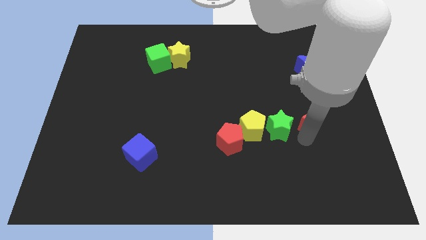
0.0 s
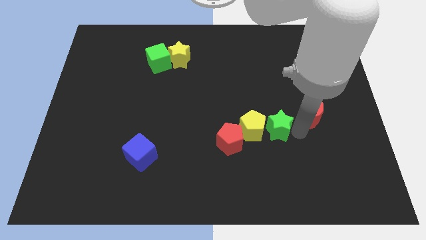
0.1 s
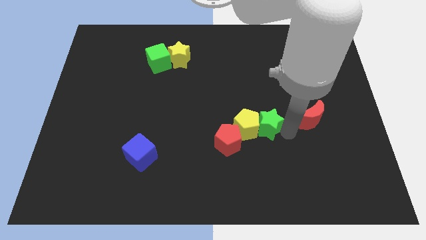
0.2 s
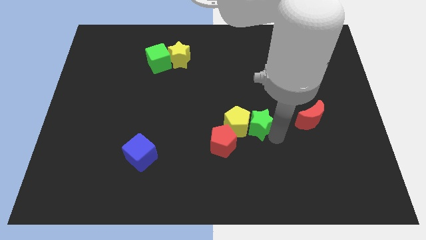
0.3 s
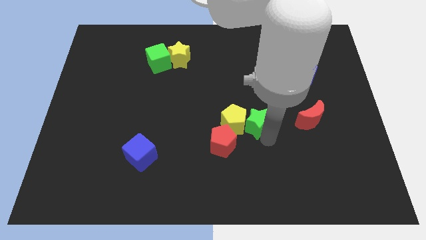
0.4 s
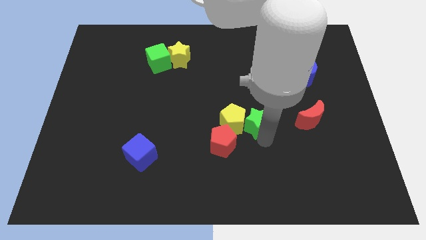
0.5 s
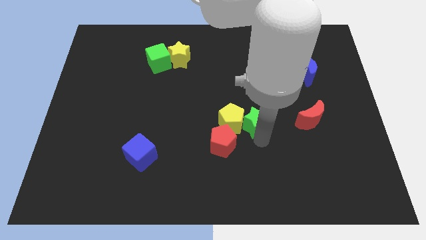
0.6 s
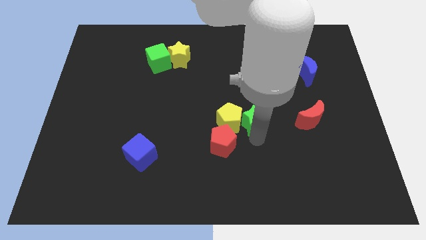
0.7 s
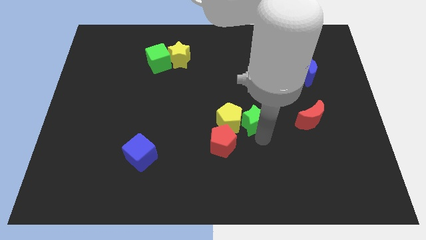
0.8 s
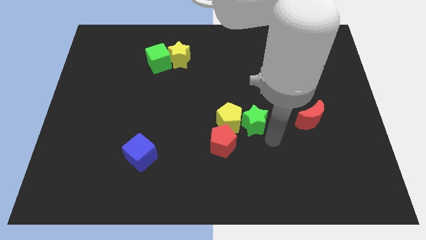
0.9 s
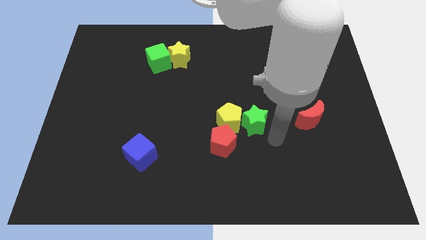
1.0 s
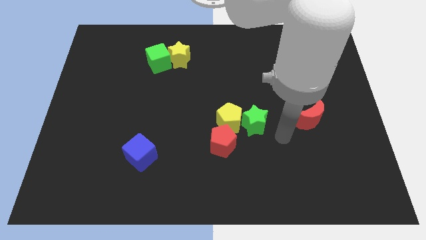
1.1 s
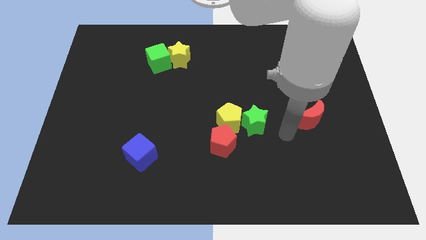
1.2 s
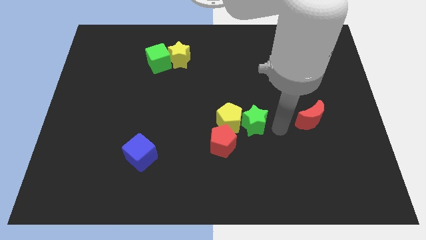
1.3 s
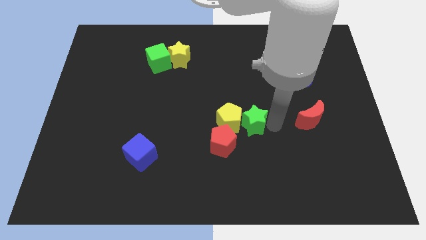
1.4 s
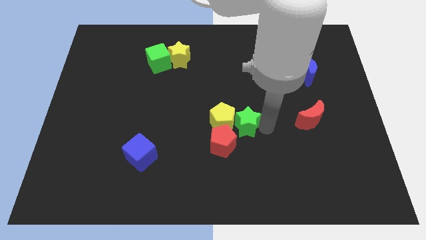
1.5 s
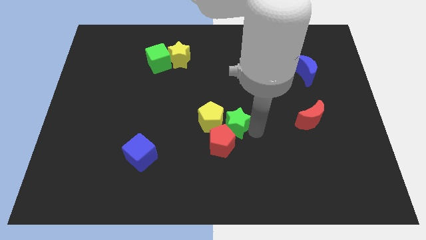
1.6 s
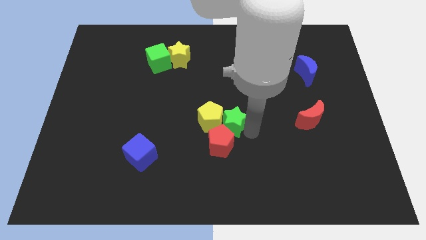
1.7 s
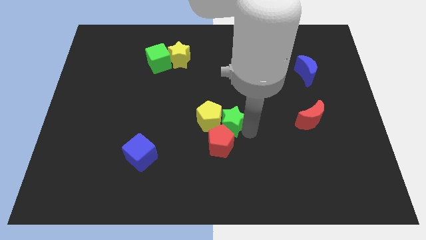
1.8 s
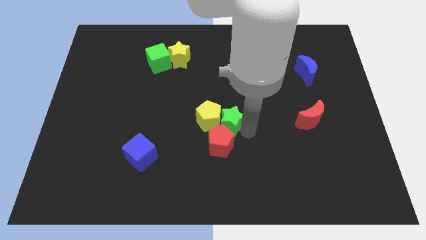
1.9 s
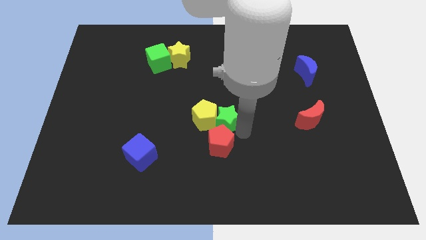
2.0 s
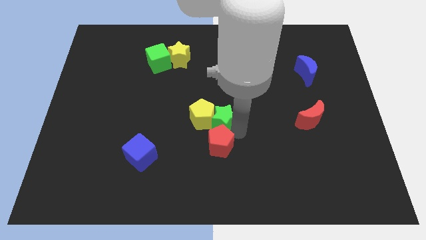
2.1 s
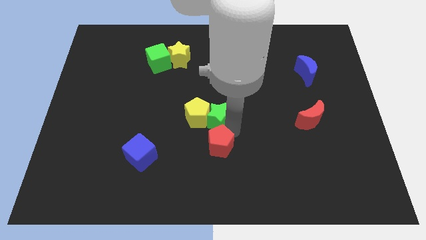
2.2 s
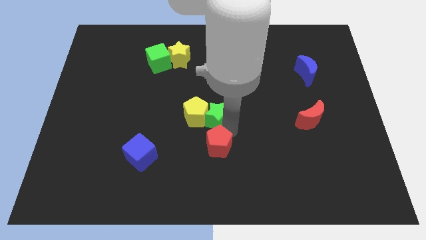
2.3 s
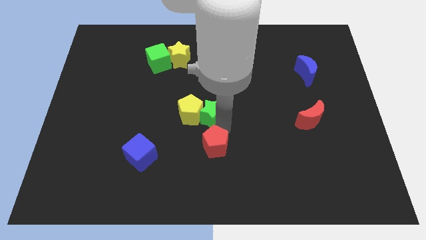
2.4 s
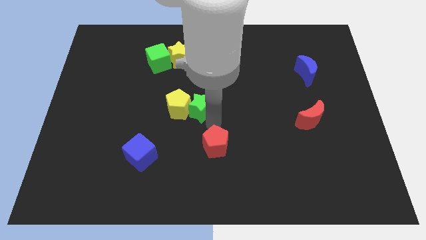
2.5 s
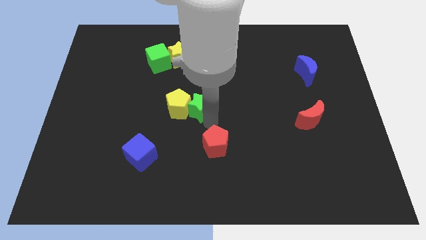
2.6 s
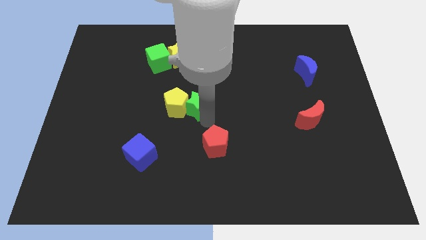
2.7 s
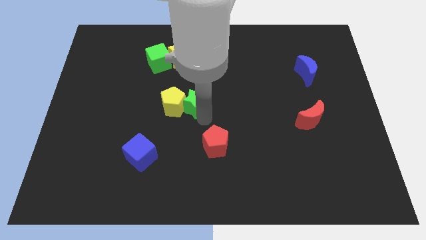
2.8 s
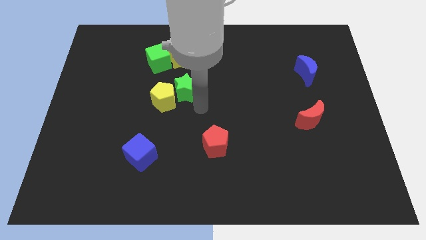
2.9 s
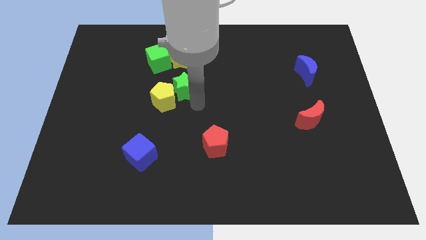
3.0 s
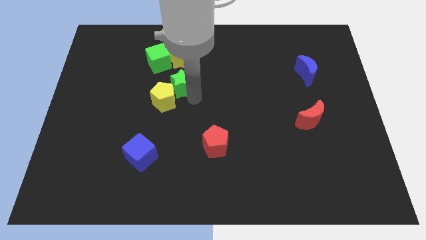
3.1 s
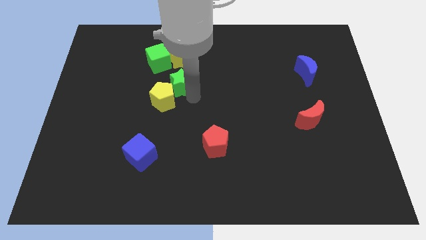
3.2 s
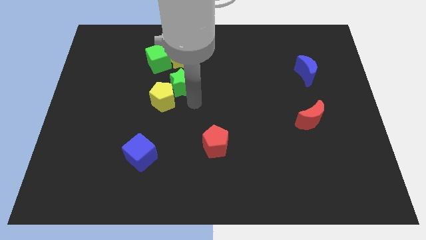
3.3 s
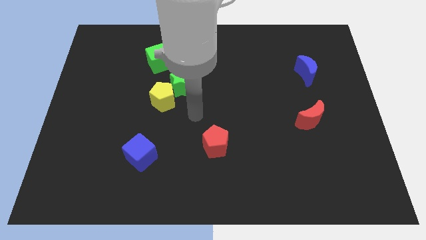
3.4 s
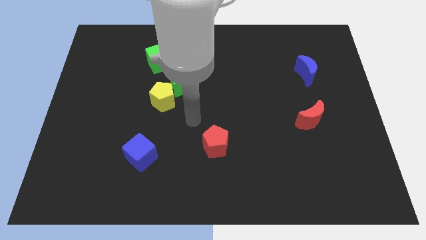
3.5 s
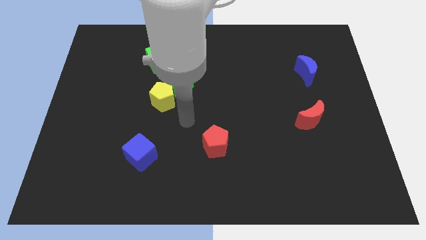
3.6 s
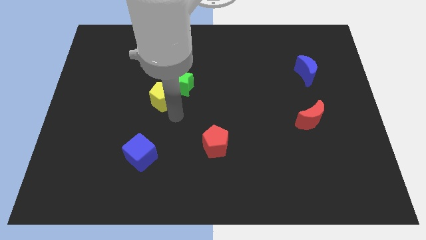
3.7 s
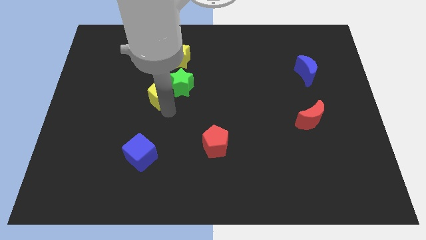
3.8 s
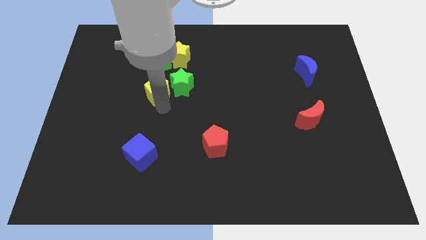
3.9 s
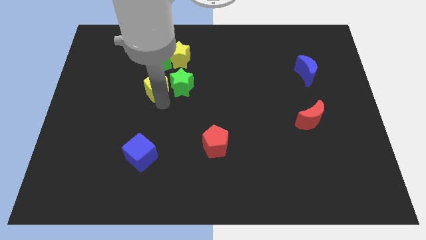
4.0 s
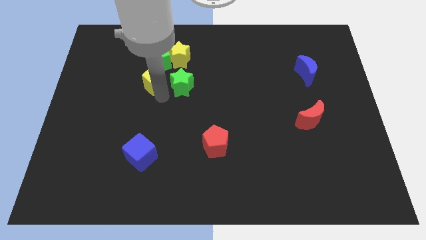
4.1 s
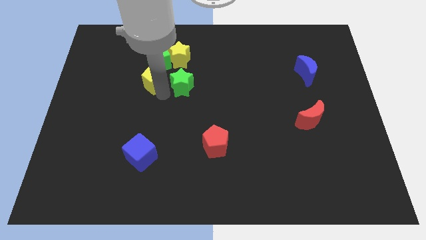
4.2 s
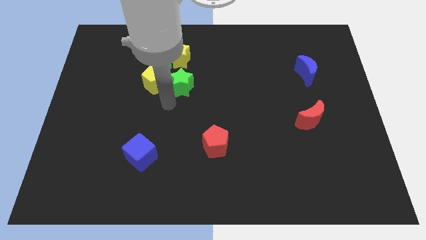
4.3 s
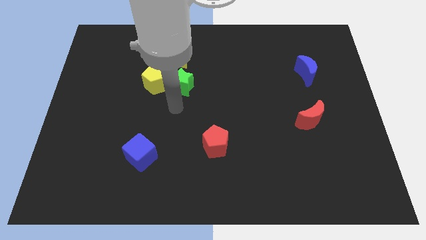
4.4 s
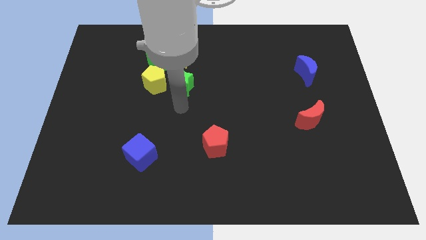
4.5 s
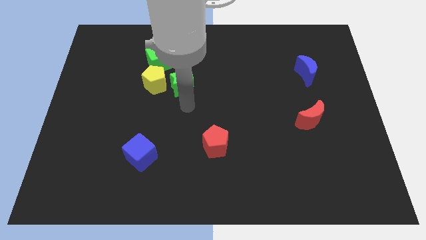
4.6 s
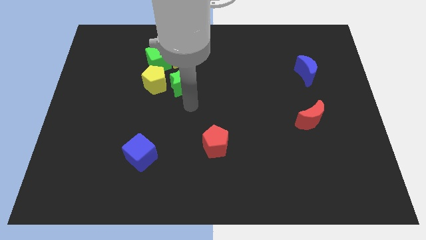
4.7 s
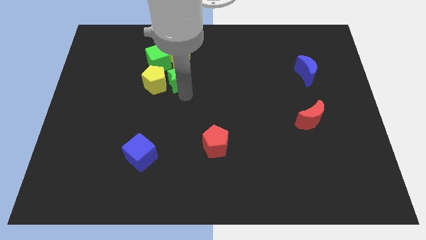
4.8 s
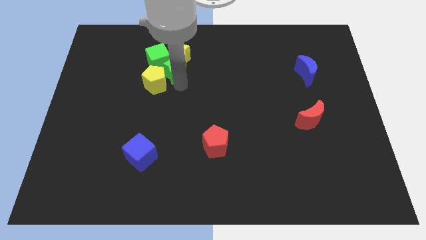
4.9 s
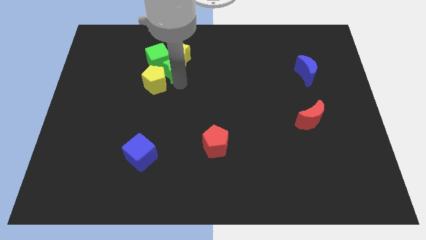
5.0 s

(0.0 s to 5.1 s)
place the yellow pentagon to the bottom of the green cube

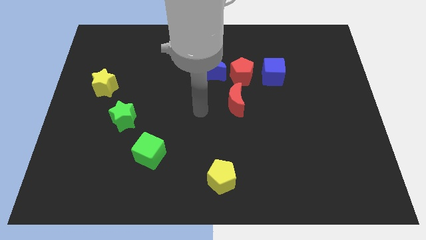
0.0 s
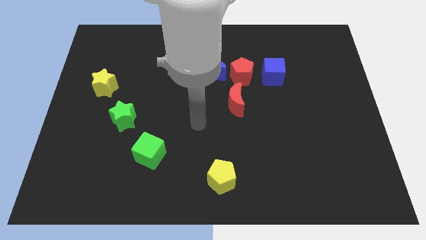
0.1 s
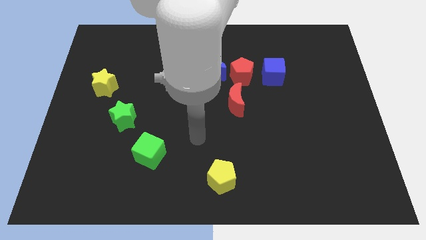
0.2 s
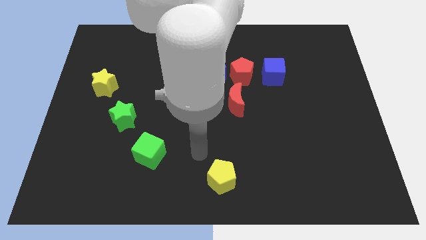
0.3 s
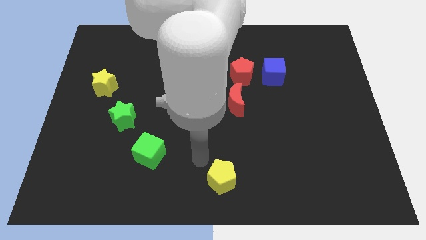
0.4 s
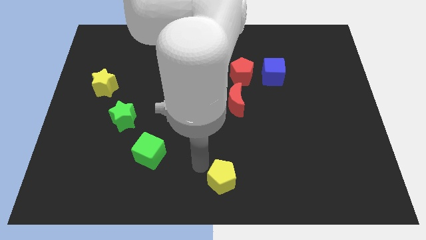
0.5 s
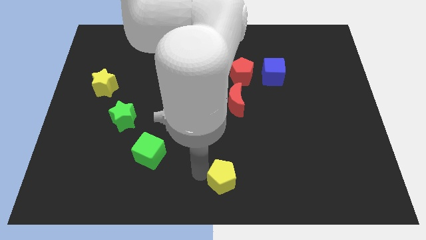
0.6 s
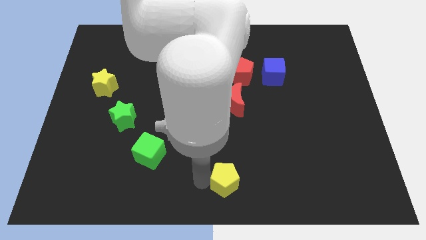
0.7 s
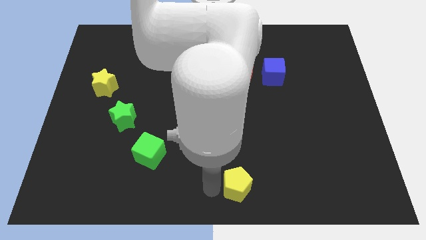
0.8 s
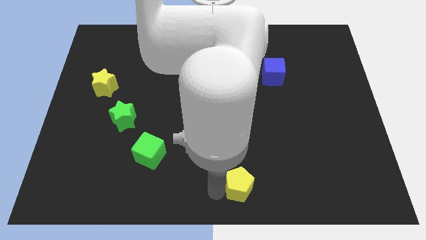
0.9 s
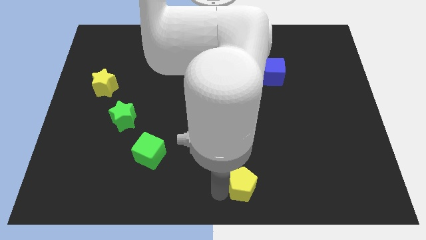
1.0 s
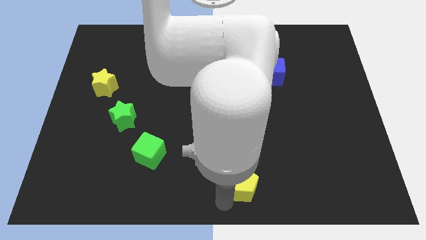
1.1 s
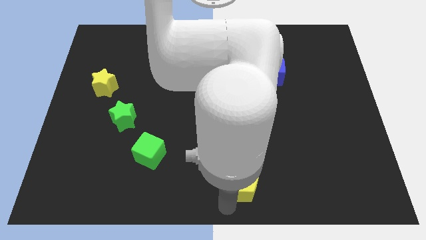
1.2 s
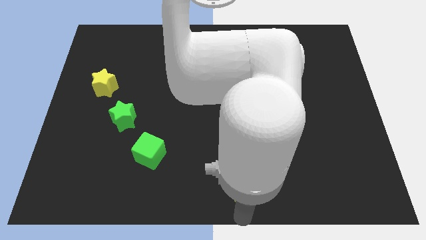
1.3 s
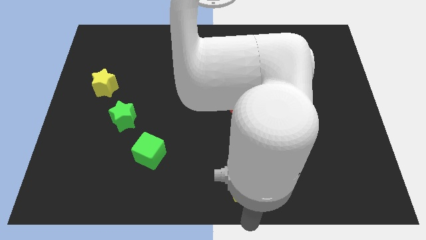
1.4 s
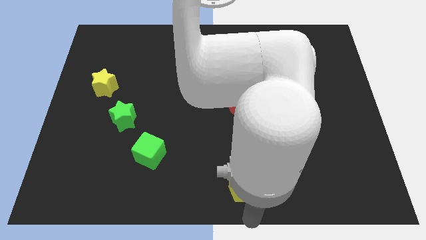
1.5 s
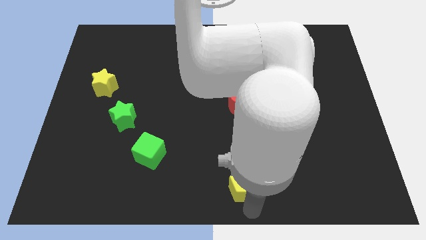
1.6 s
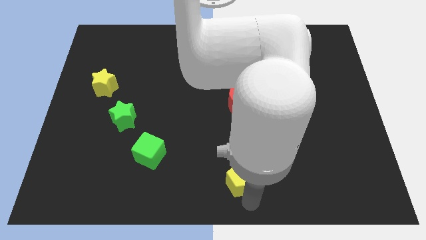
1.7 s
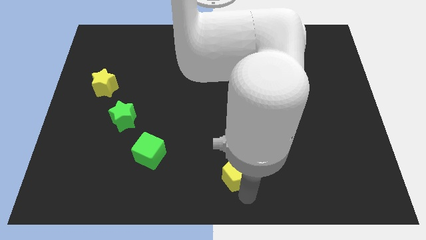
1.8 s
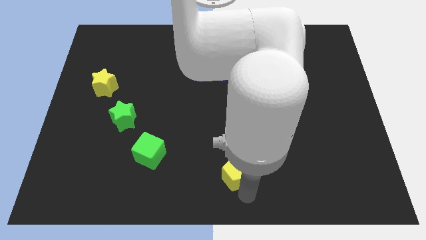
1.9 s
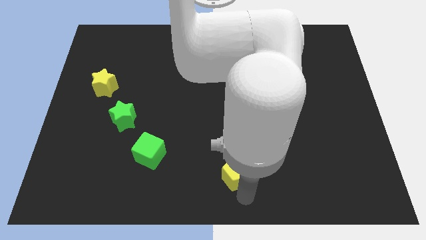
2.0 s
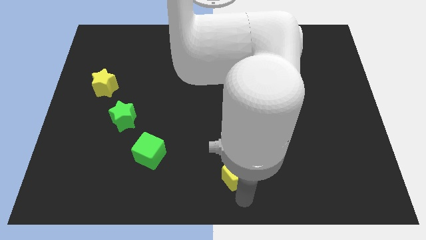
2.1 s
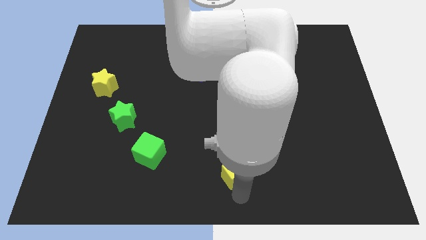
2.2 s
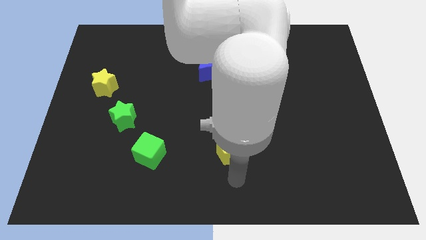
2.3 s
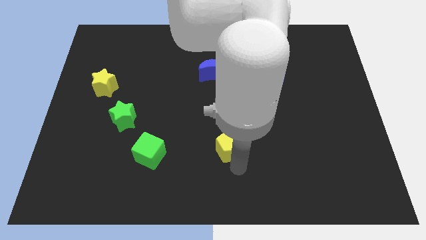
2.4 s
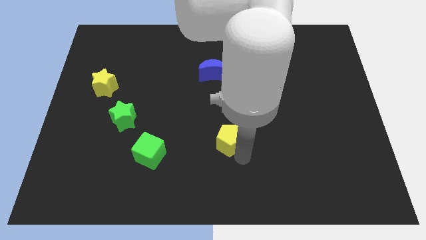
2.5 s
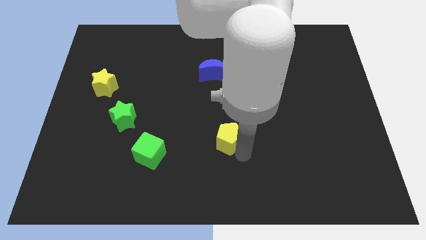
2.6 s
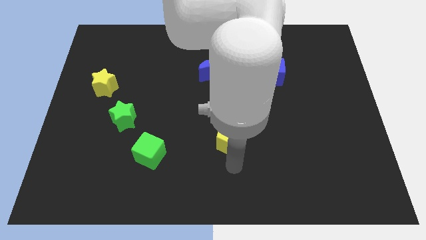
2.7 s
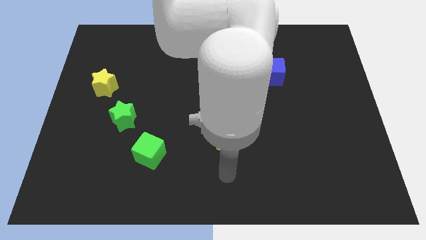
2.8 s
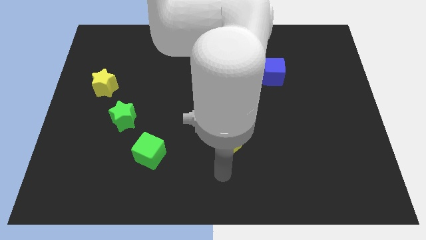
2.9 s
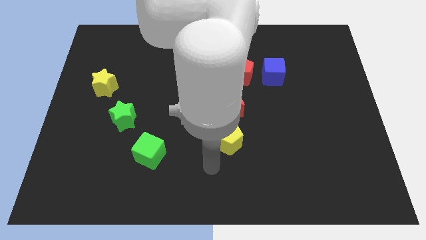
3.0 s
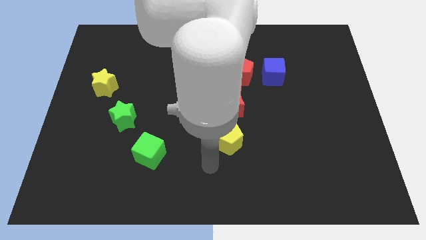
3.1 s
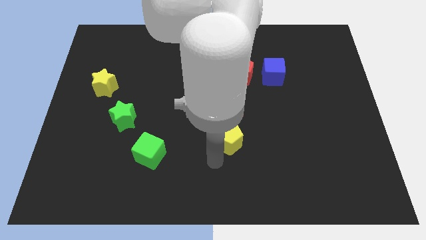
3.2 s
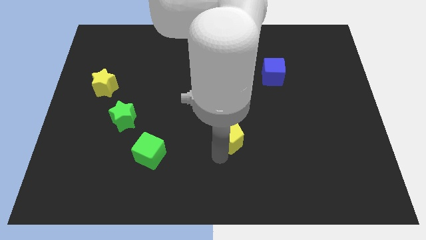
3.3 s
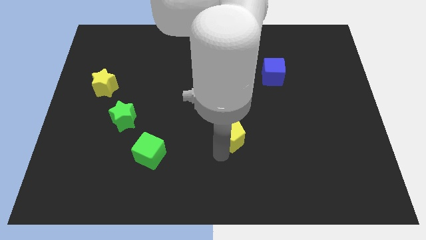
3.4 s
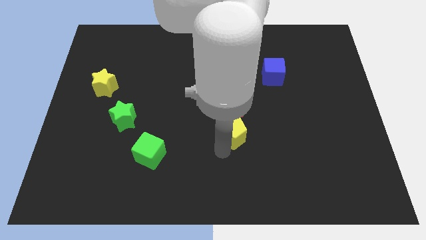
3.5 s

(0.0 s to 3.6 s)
place the yellow pentagon below the red crescent

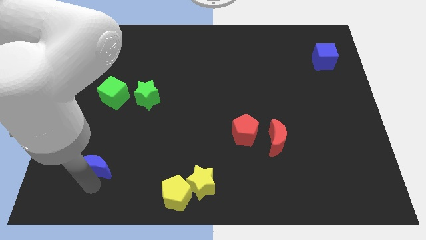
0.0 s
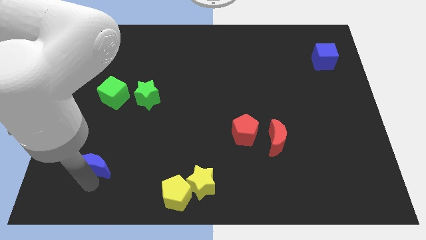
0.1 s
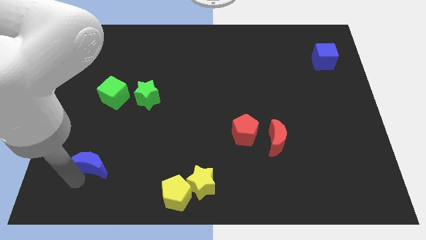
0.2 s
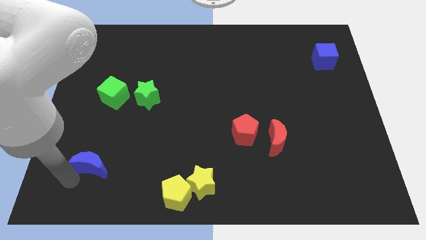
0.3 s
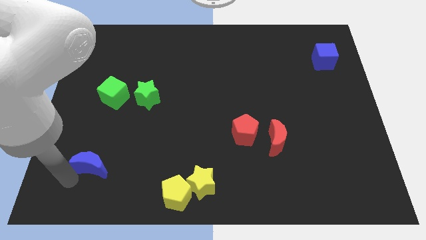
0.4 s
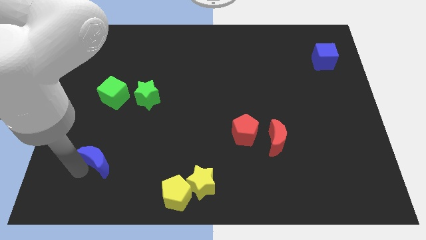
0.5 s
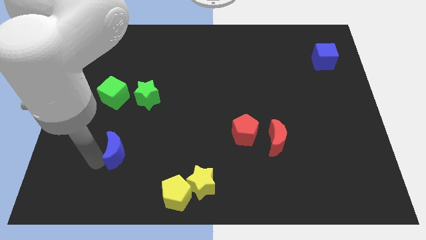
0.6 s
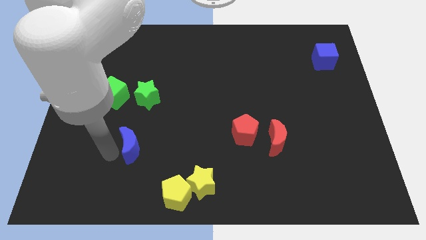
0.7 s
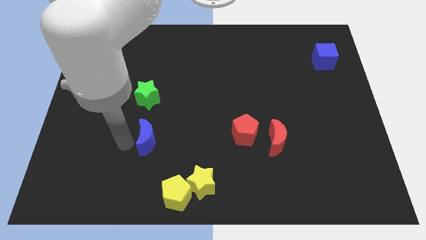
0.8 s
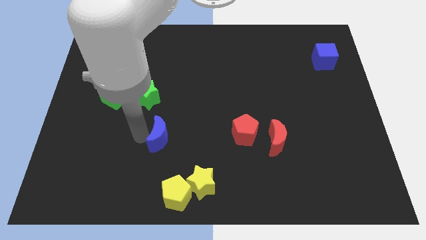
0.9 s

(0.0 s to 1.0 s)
put the blue moon below the green star
